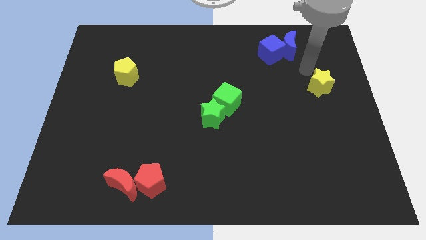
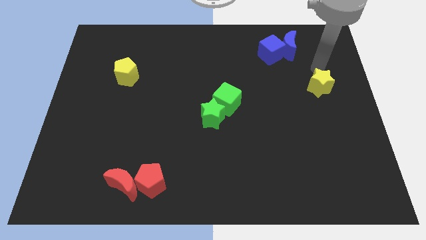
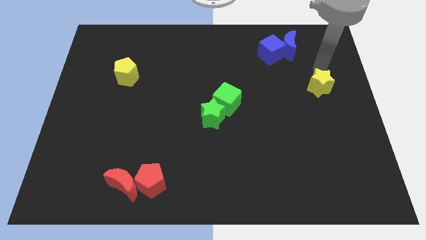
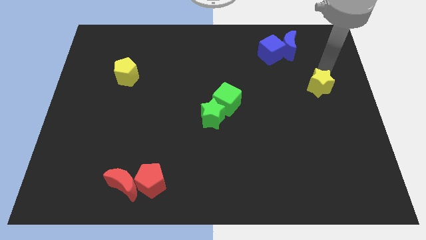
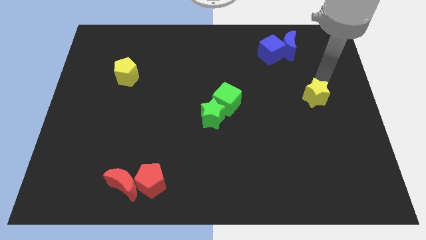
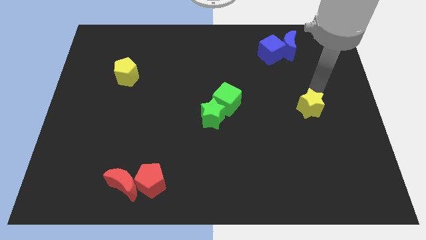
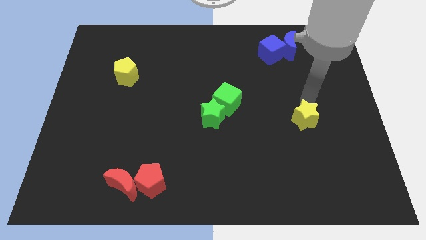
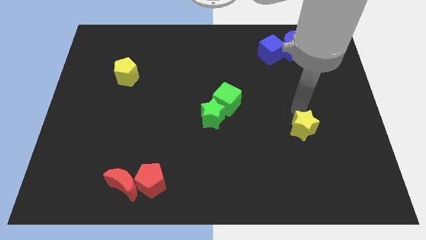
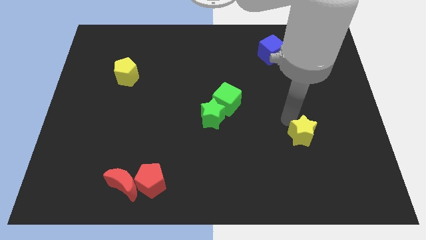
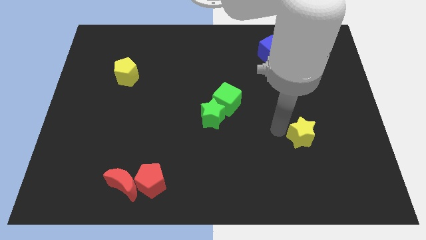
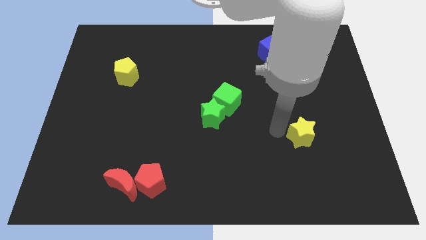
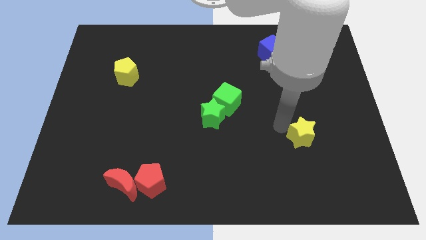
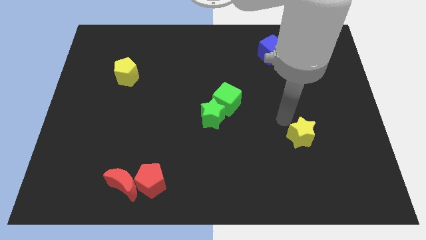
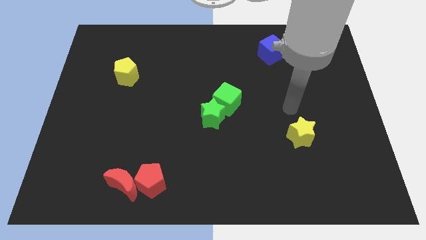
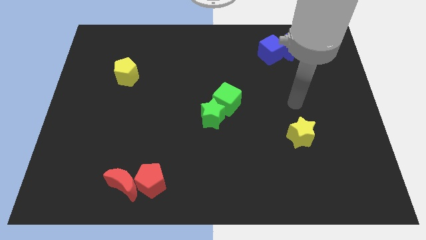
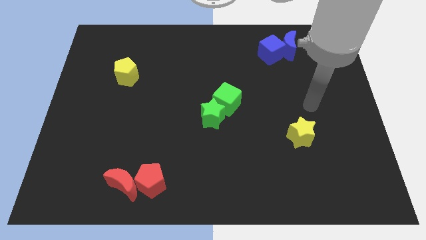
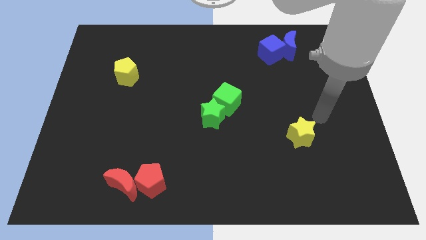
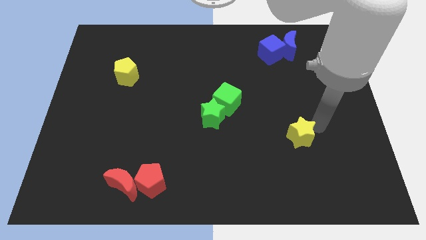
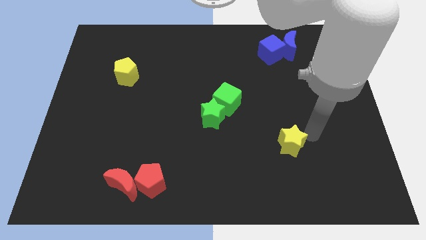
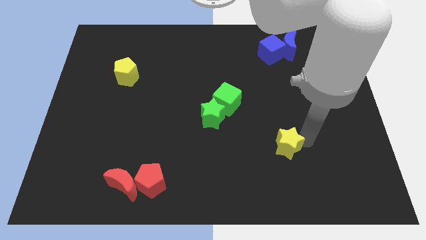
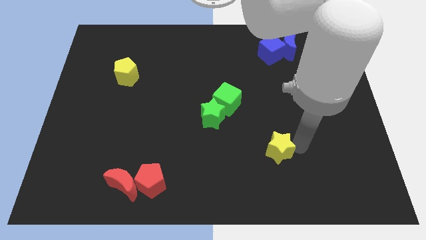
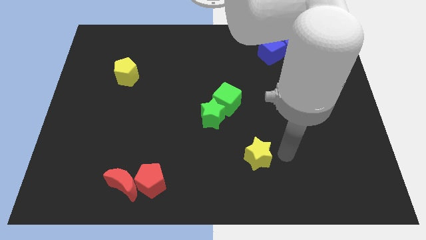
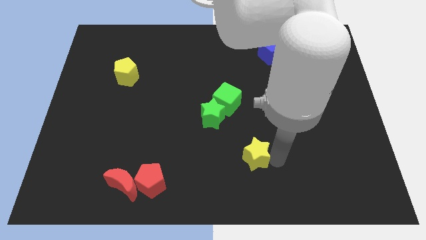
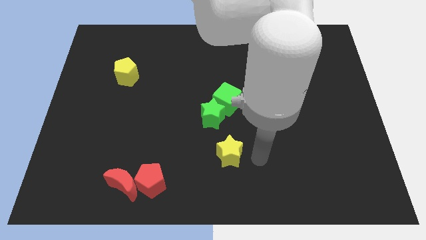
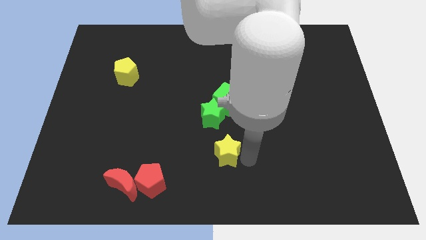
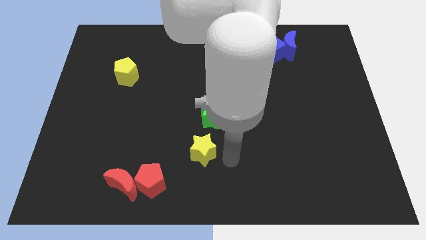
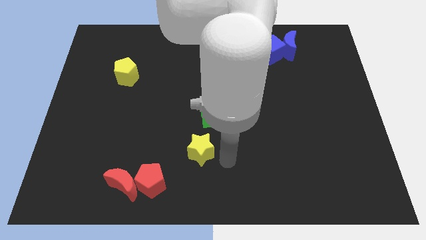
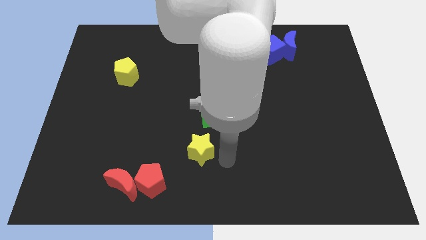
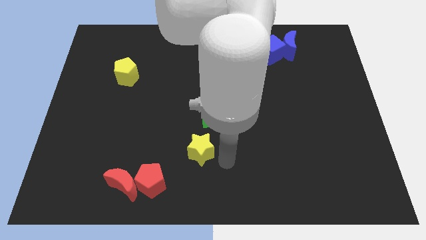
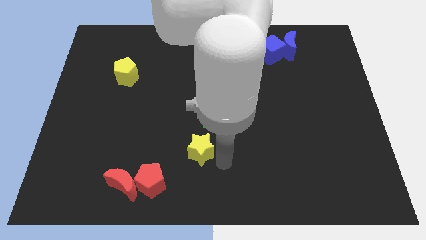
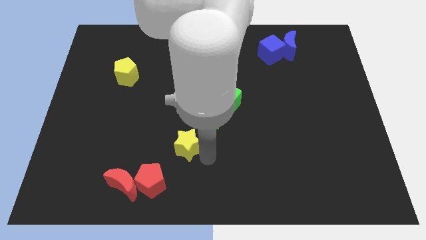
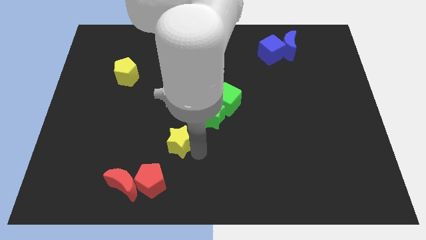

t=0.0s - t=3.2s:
place the yellow star below the green star

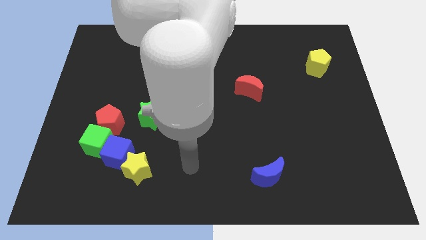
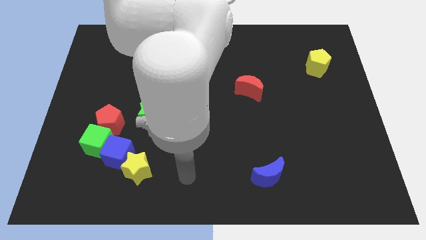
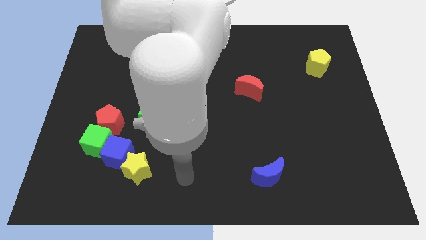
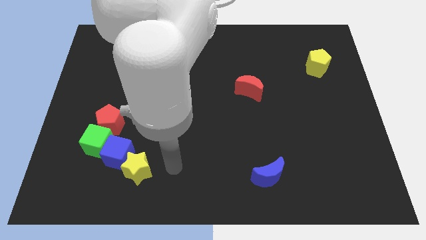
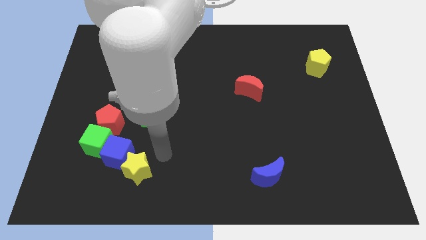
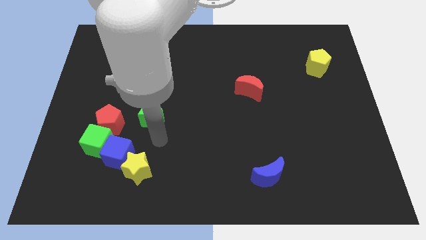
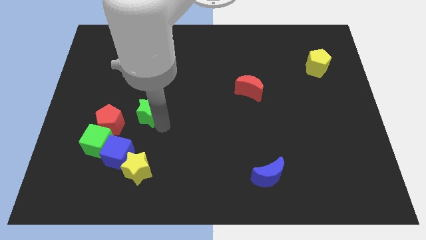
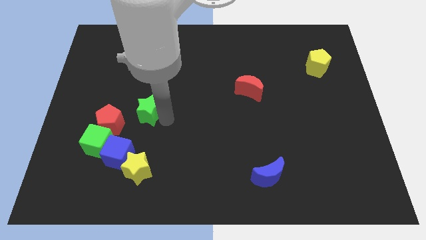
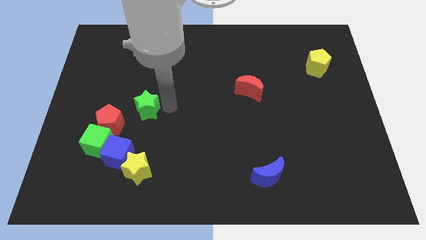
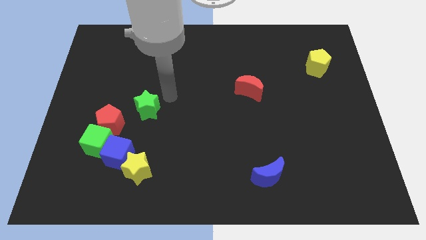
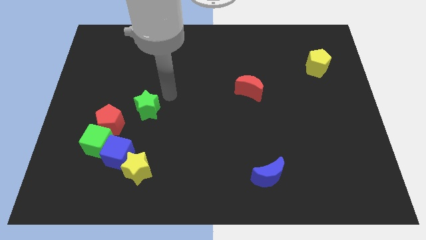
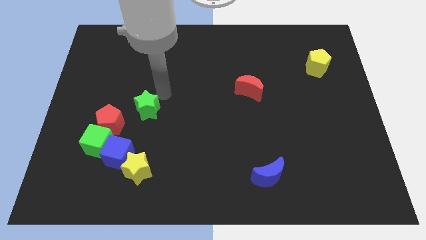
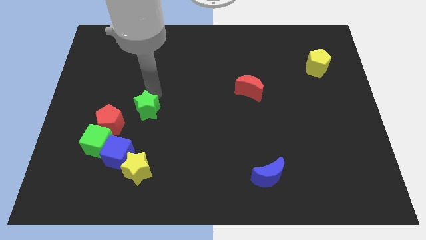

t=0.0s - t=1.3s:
push the green star to the top right of the red pentagon

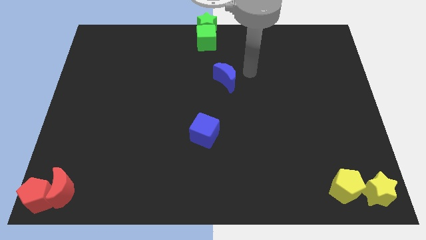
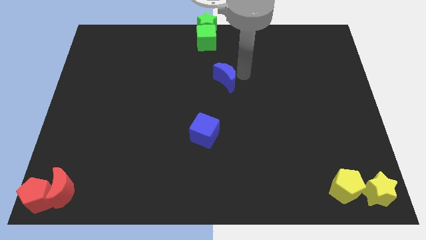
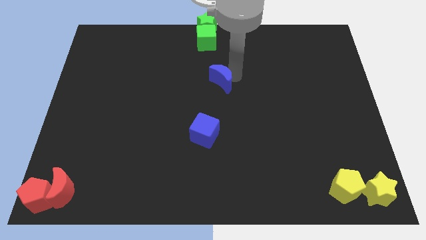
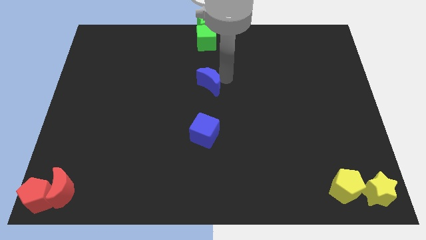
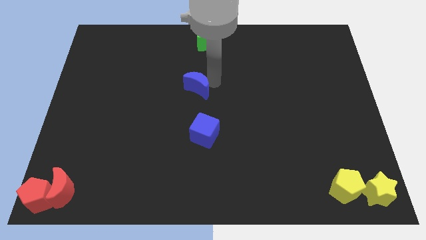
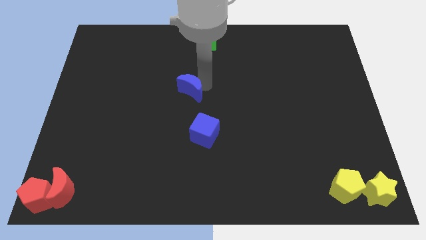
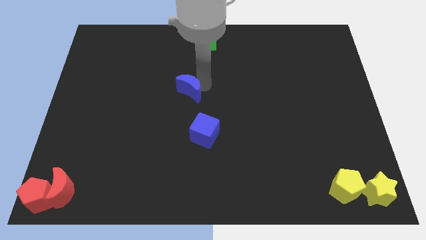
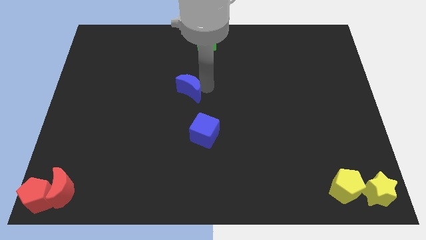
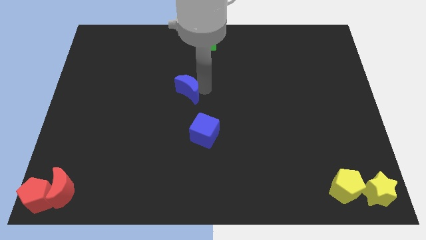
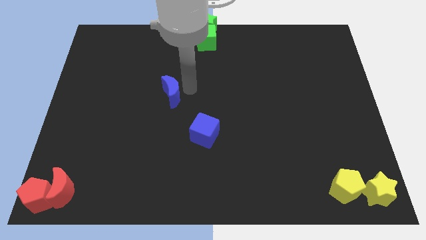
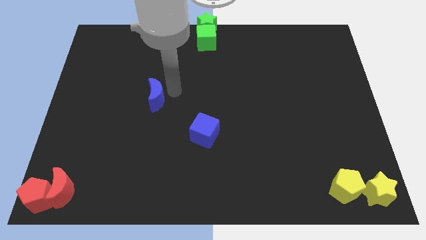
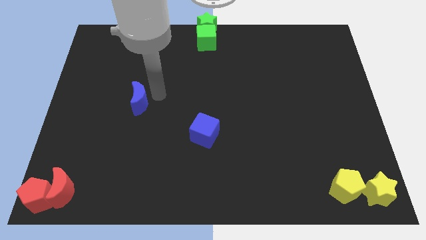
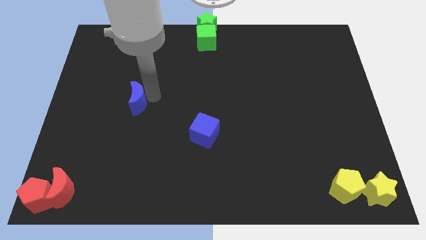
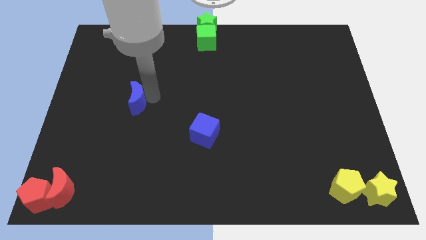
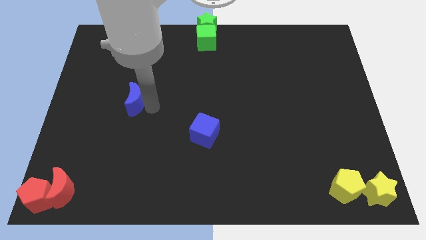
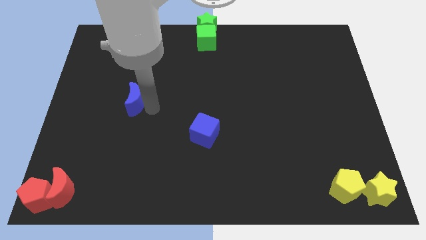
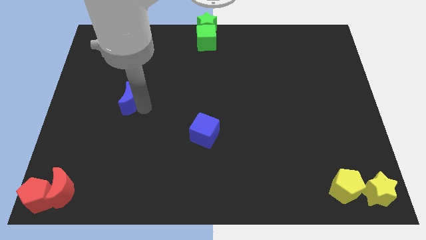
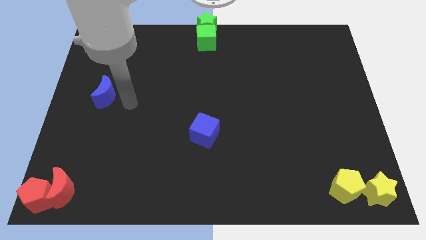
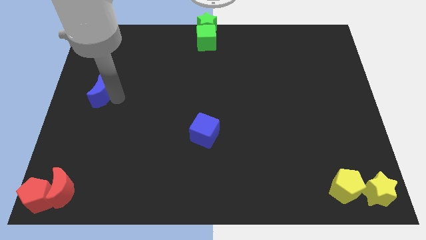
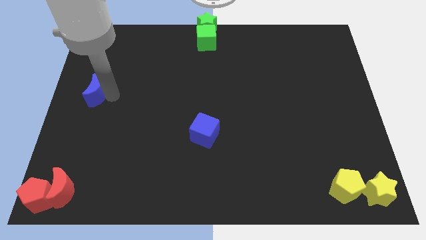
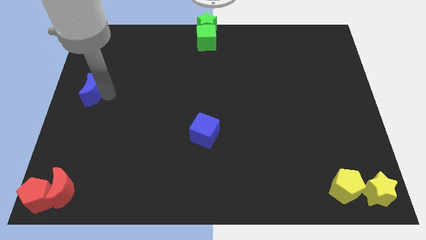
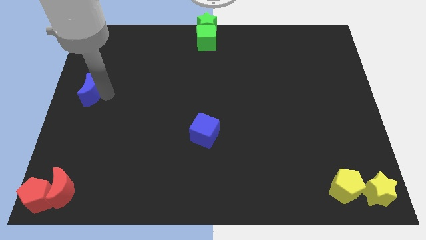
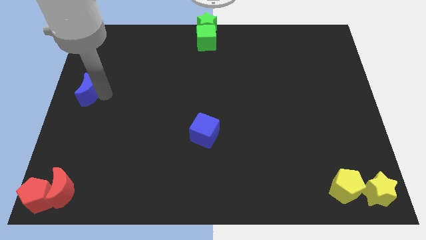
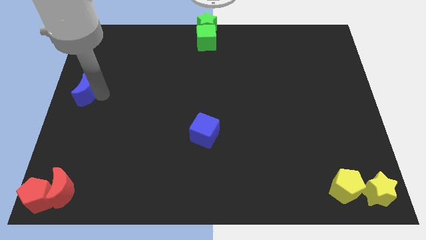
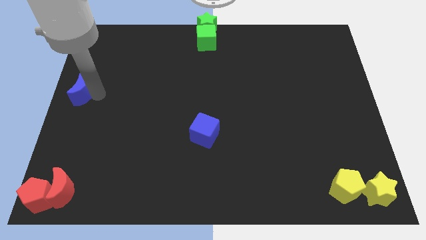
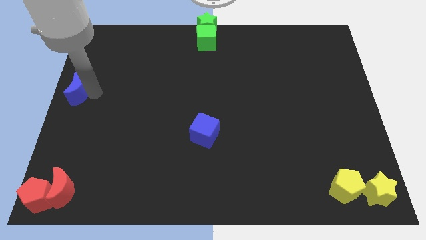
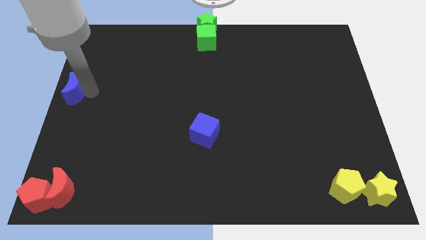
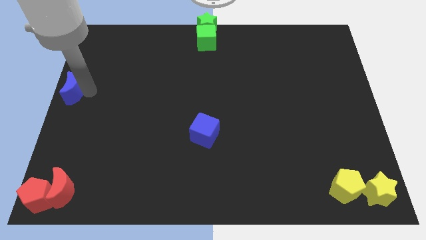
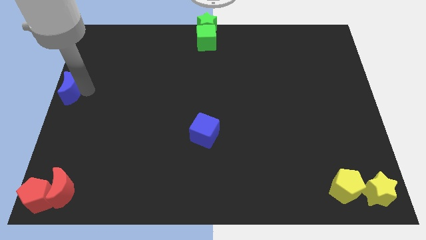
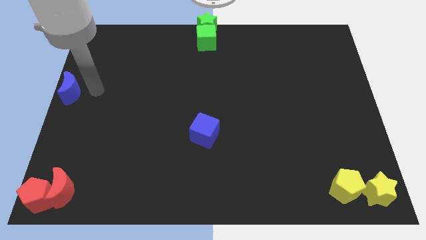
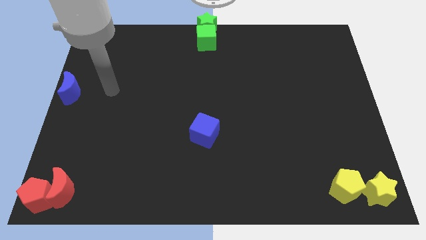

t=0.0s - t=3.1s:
move the blue crescent at the center left of the board

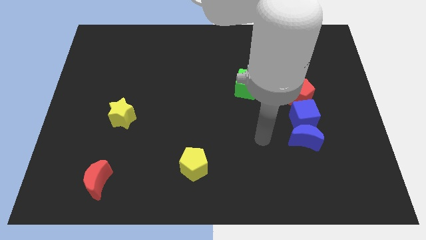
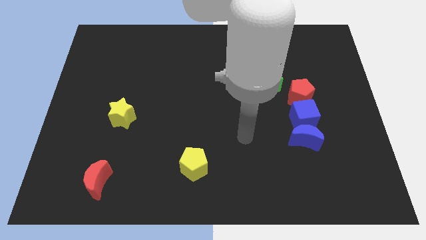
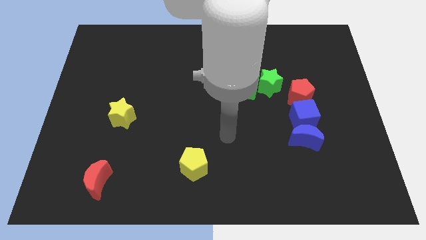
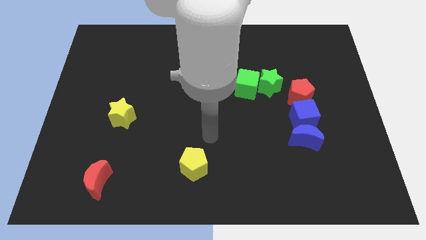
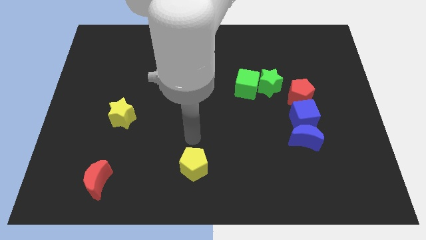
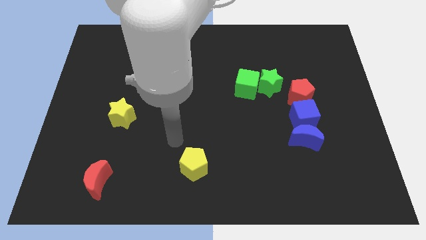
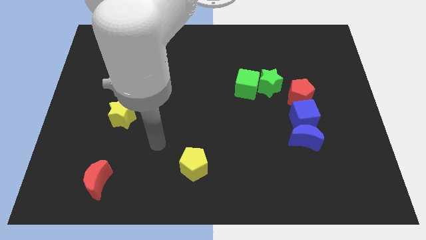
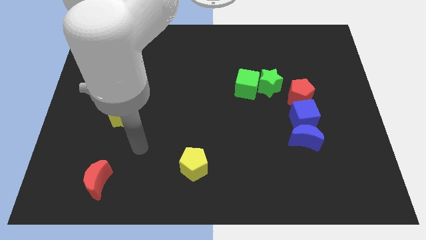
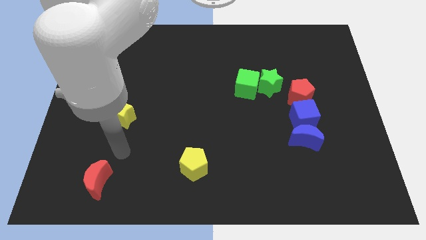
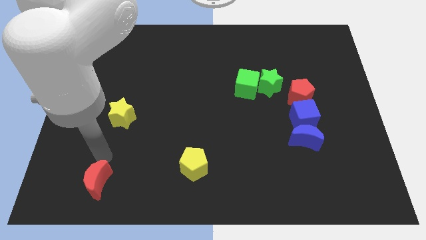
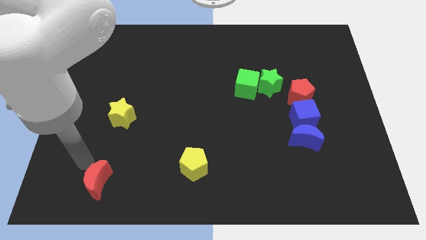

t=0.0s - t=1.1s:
point your arm at the top of the red crescent

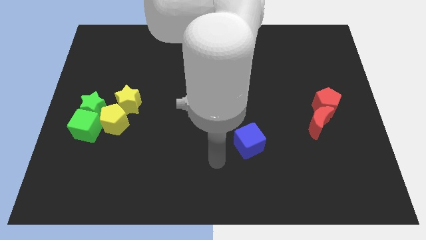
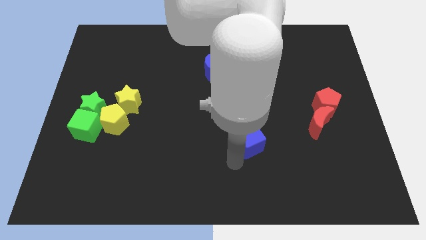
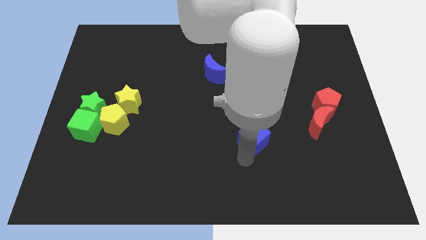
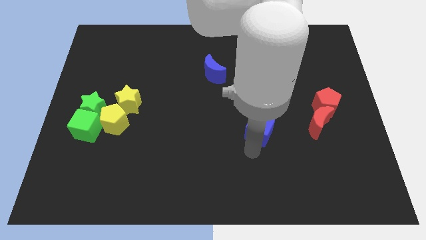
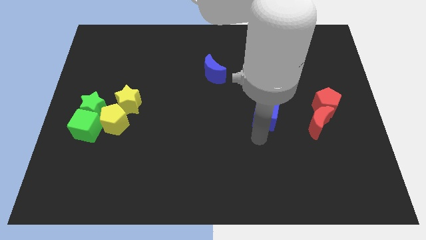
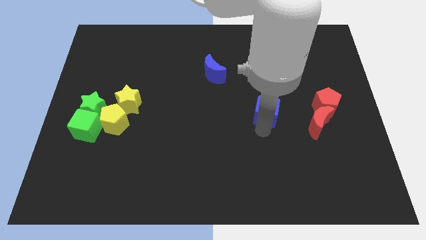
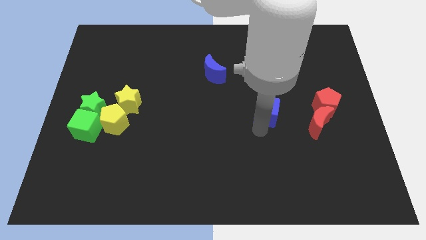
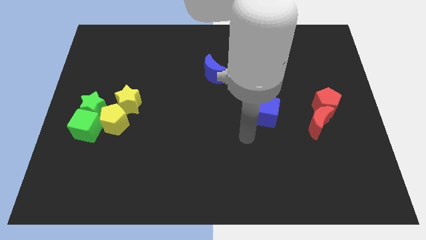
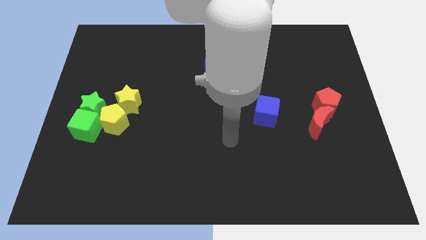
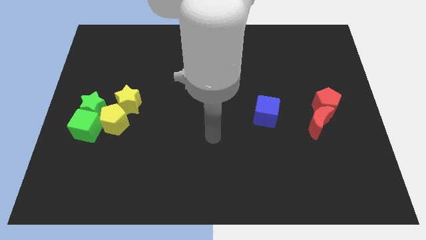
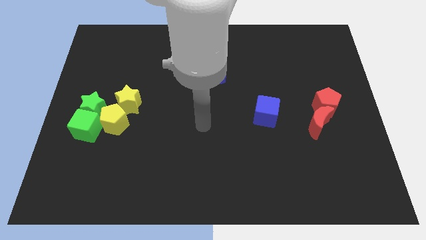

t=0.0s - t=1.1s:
push blue cube to the left of red moon
